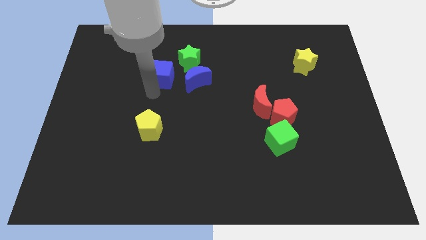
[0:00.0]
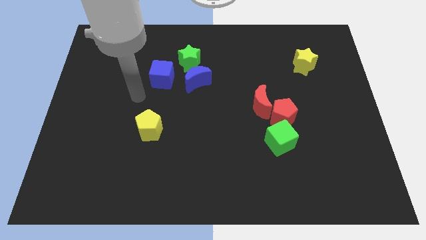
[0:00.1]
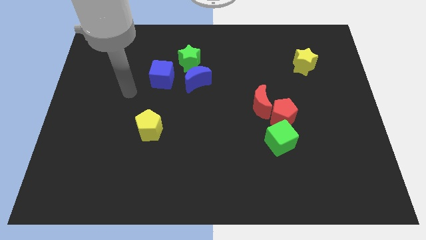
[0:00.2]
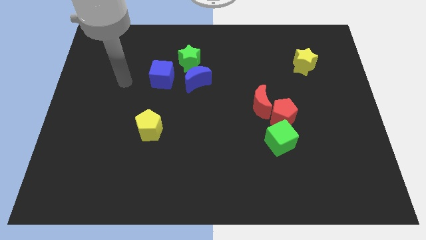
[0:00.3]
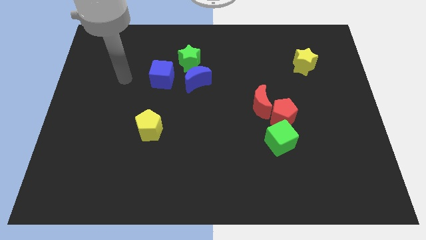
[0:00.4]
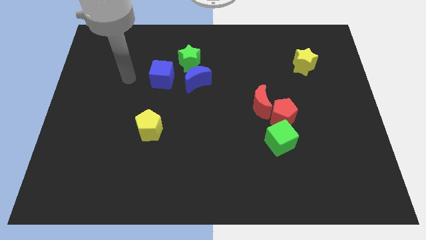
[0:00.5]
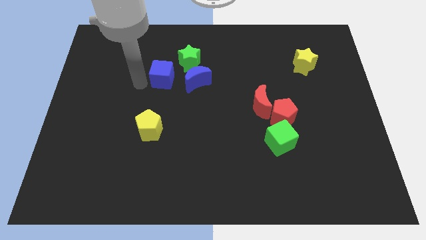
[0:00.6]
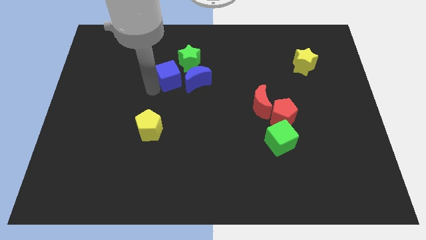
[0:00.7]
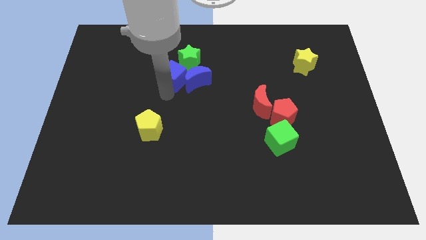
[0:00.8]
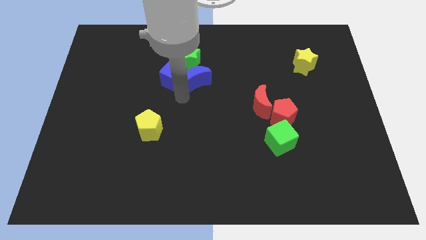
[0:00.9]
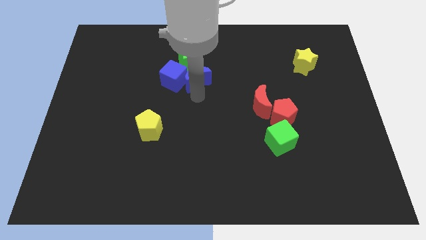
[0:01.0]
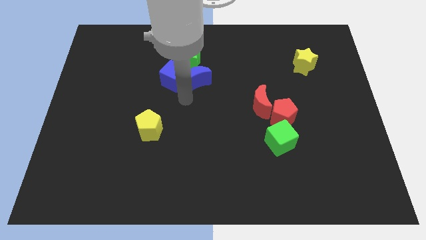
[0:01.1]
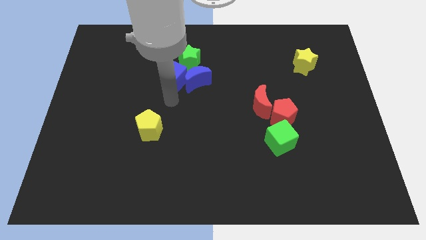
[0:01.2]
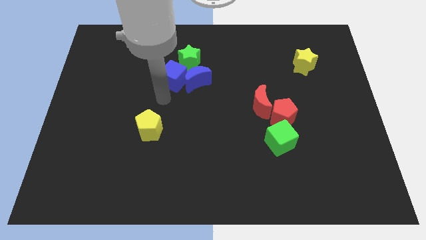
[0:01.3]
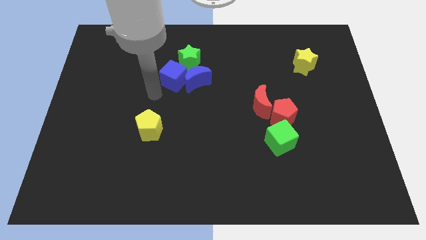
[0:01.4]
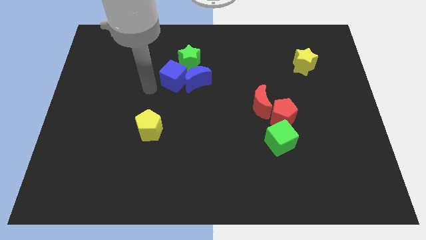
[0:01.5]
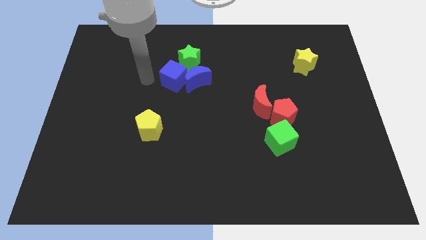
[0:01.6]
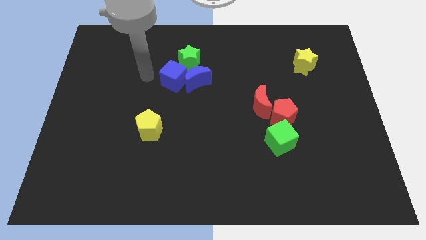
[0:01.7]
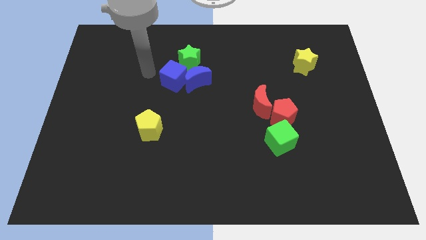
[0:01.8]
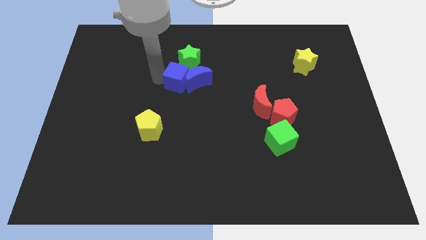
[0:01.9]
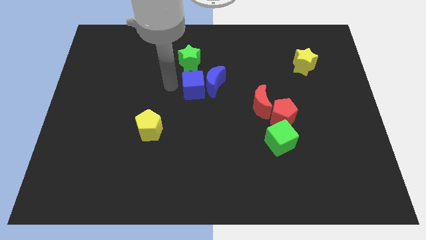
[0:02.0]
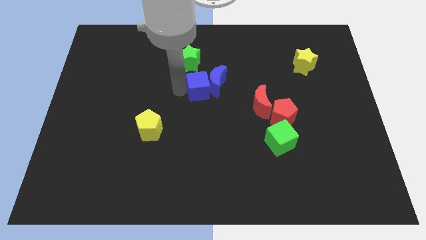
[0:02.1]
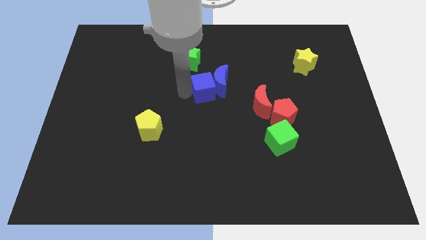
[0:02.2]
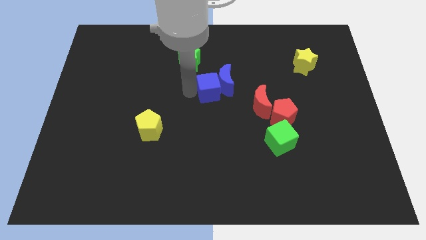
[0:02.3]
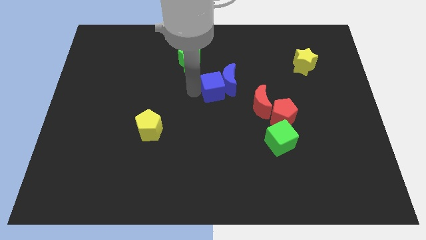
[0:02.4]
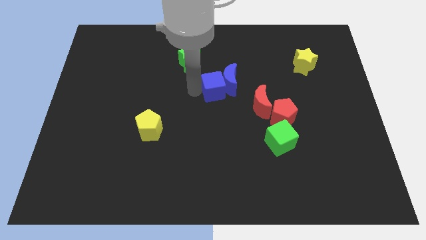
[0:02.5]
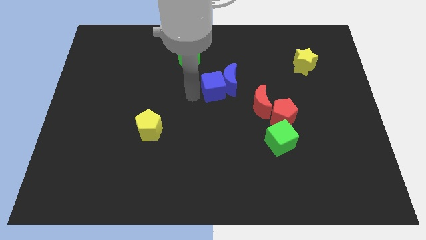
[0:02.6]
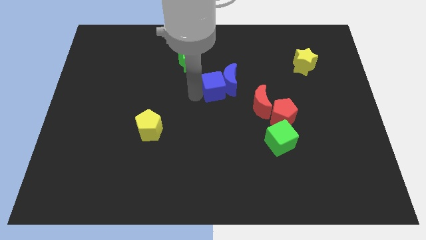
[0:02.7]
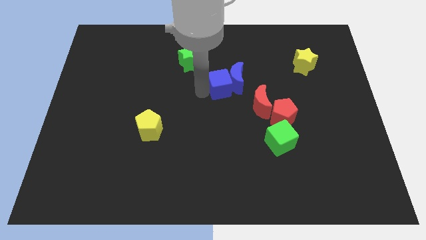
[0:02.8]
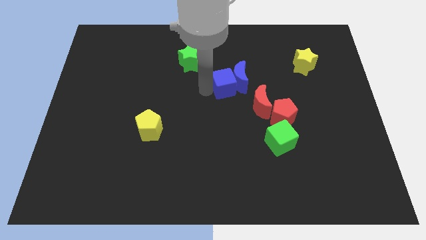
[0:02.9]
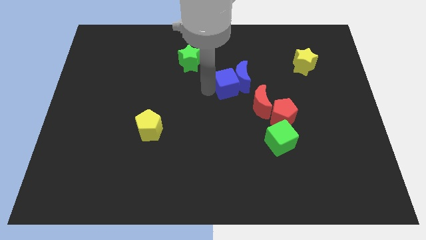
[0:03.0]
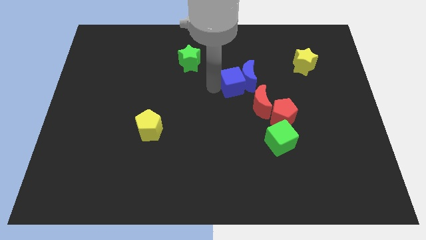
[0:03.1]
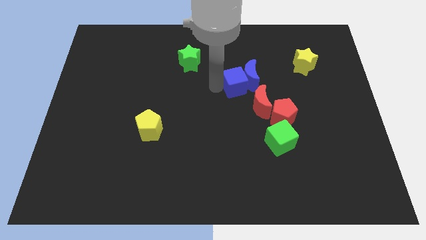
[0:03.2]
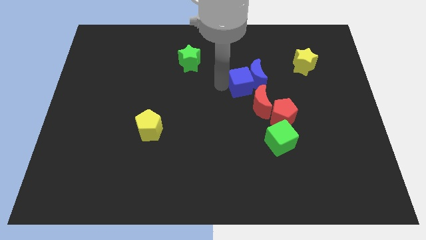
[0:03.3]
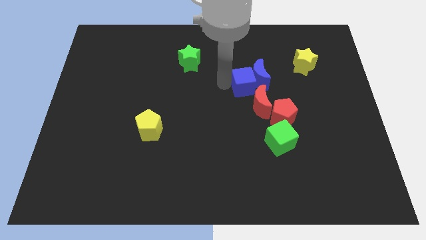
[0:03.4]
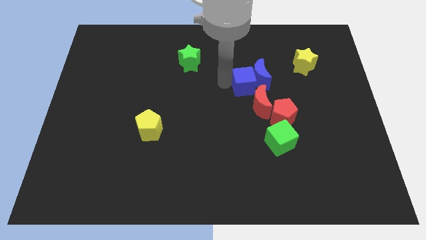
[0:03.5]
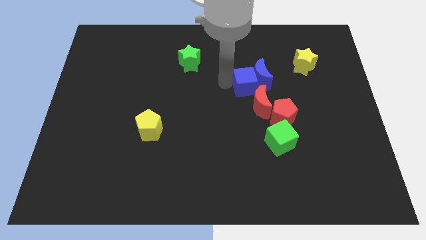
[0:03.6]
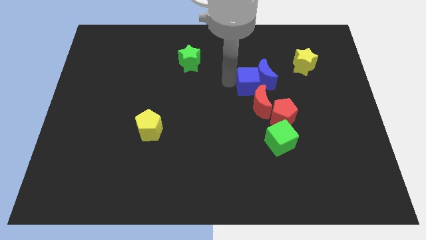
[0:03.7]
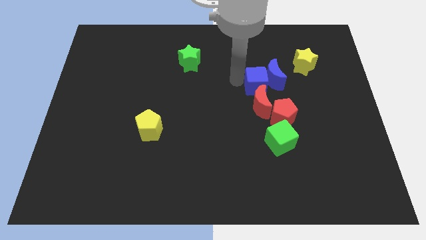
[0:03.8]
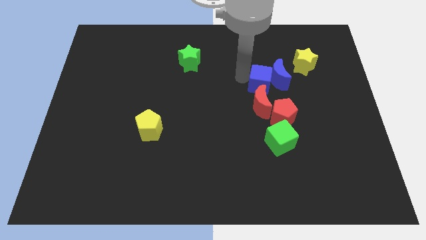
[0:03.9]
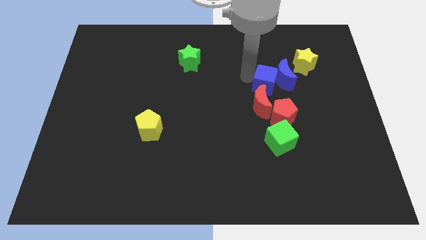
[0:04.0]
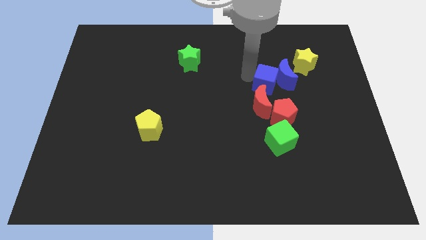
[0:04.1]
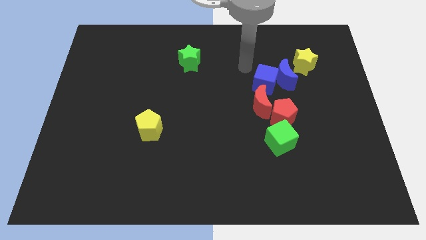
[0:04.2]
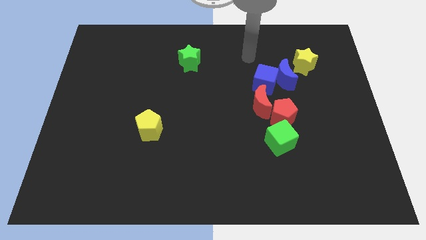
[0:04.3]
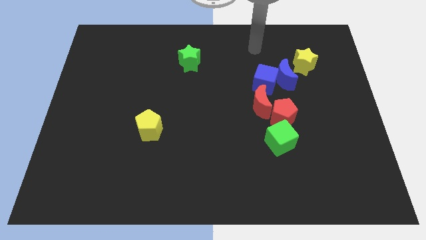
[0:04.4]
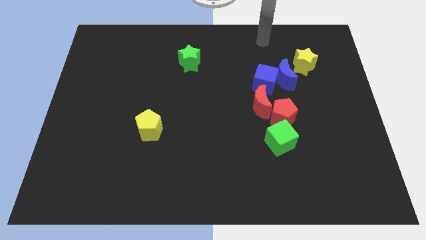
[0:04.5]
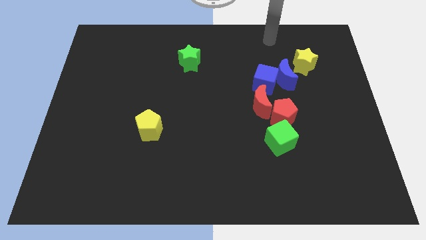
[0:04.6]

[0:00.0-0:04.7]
push the blue cube with blue crescent to the bottom of the yellow star

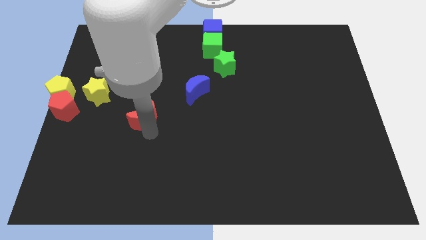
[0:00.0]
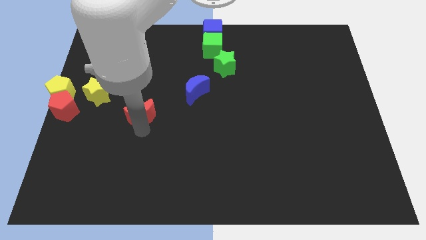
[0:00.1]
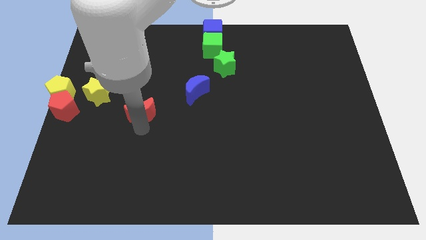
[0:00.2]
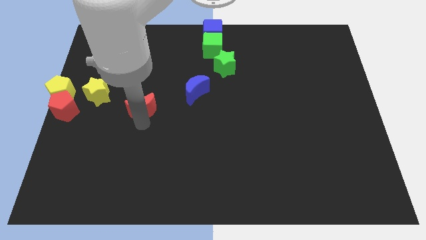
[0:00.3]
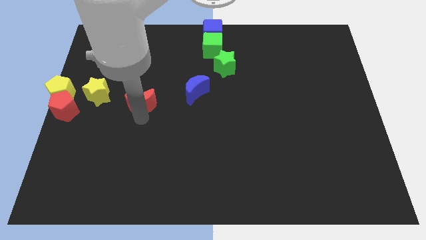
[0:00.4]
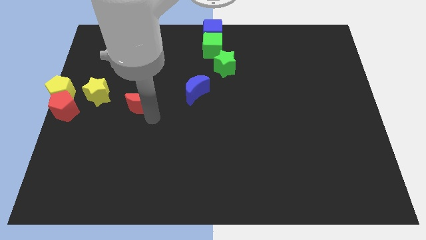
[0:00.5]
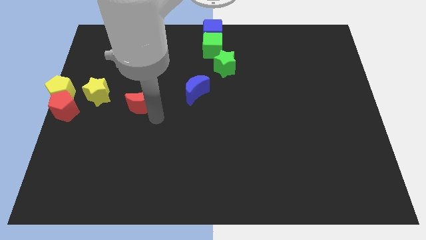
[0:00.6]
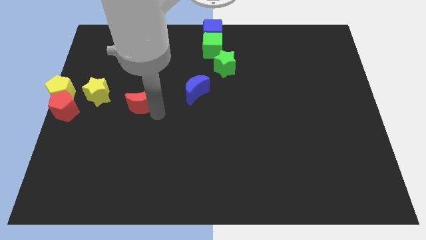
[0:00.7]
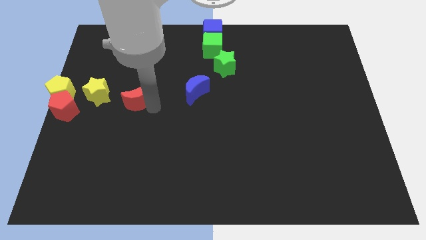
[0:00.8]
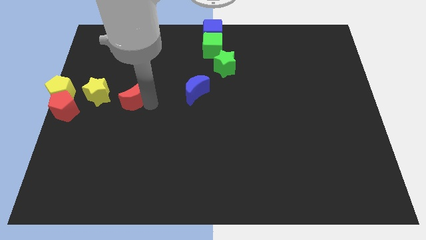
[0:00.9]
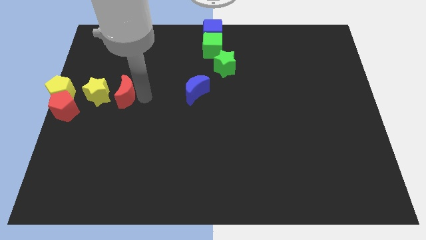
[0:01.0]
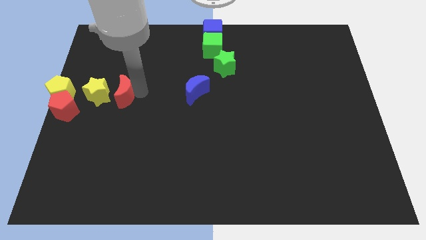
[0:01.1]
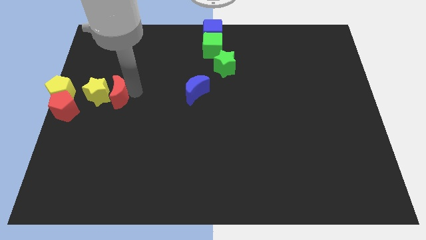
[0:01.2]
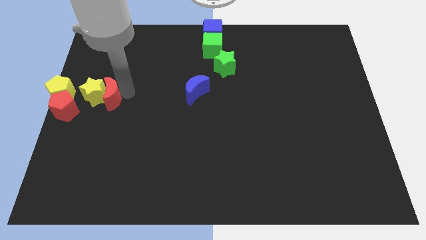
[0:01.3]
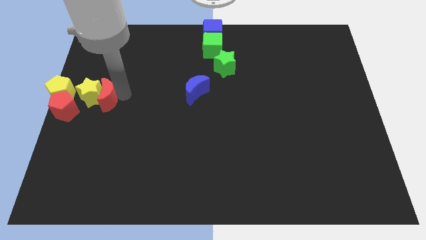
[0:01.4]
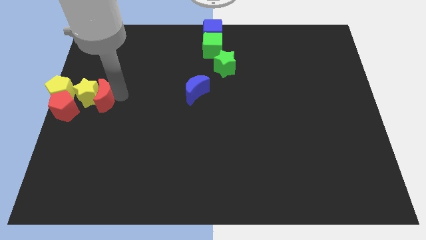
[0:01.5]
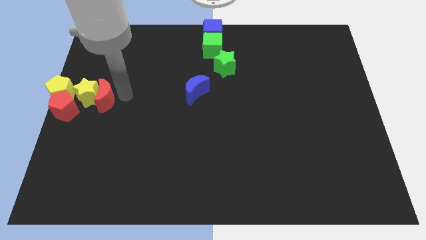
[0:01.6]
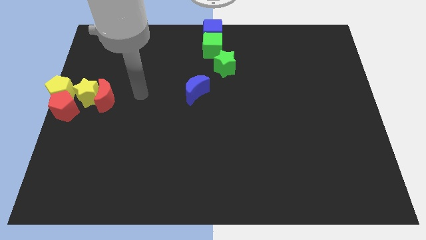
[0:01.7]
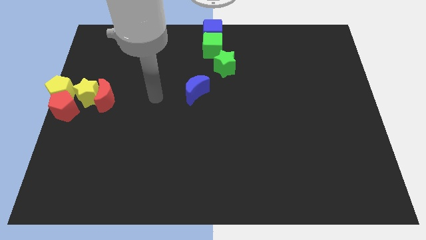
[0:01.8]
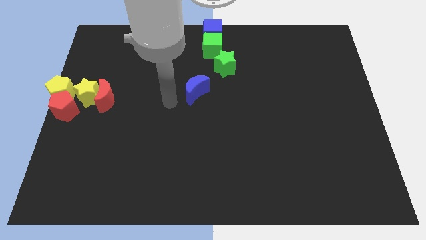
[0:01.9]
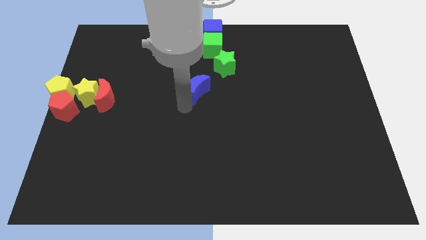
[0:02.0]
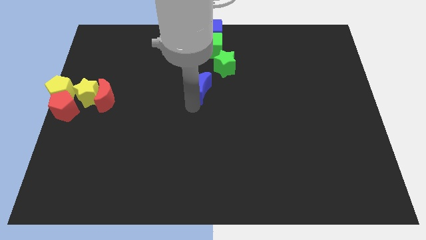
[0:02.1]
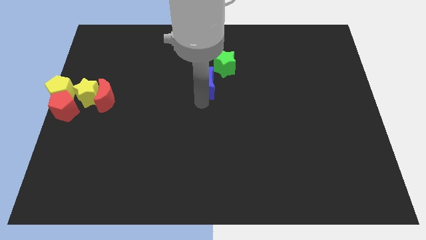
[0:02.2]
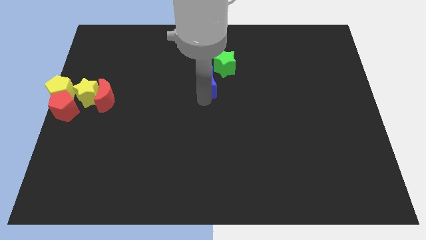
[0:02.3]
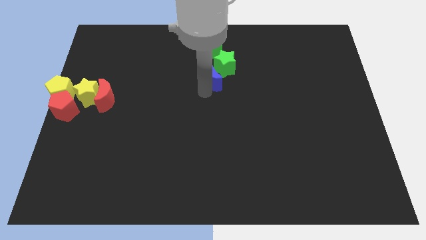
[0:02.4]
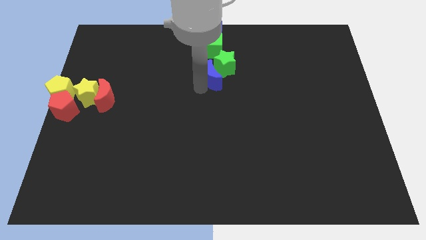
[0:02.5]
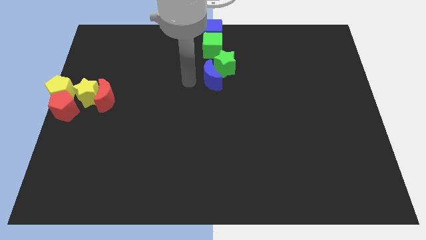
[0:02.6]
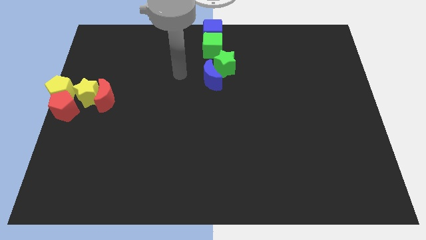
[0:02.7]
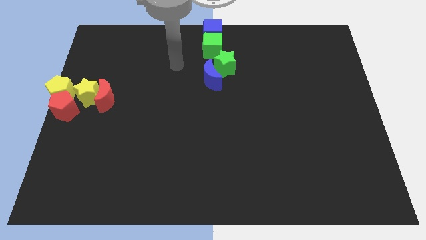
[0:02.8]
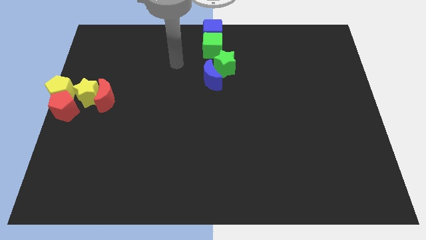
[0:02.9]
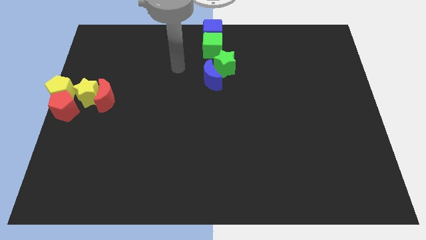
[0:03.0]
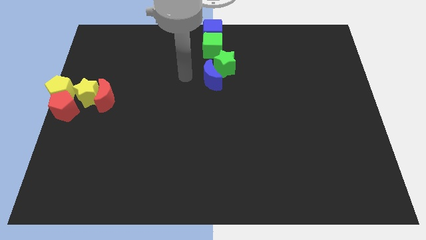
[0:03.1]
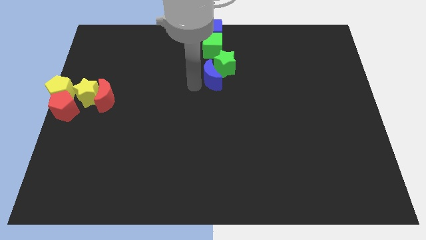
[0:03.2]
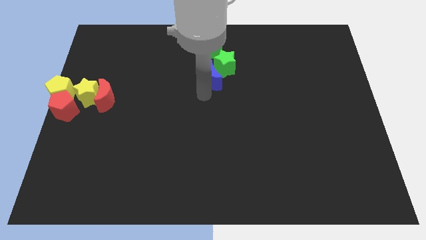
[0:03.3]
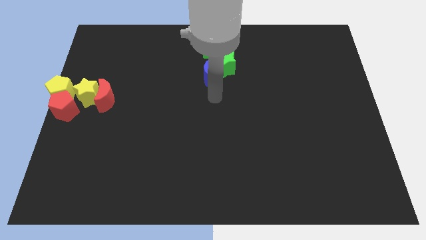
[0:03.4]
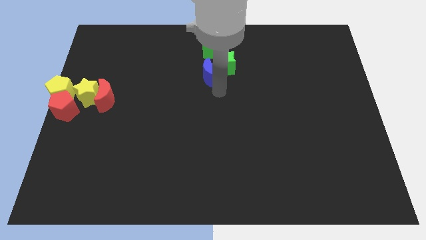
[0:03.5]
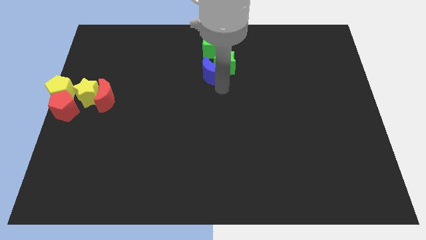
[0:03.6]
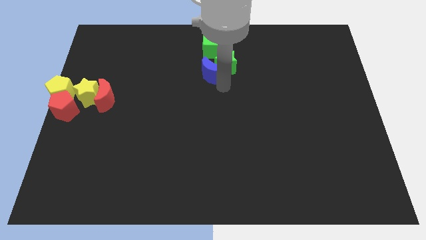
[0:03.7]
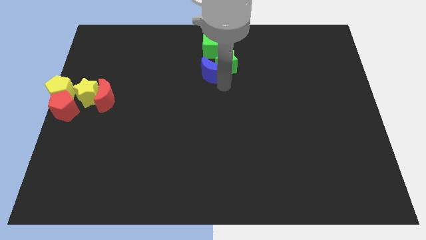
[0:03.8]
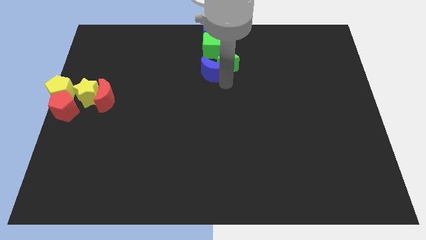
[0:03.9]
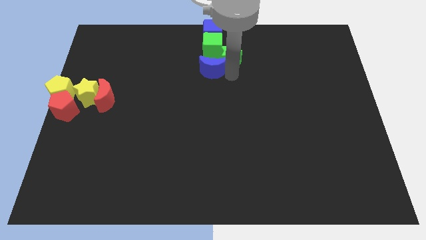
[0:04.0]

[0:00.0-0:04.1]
move the red crescent to the right side of the yellow star
